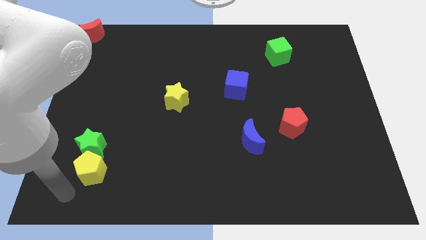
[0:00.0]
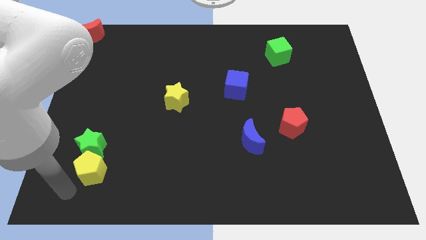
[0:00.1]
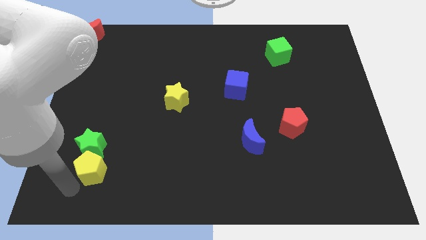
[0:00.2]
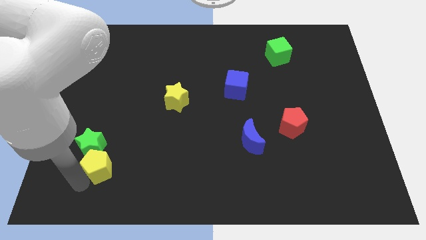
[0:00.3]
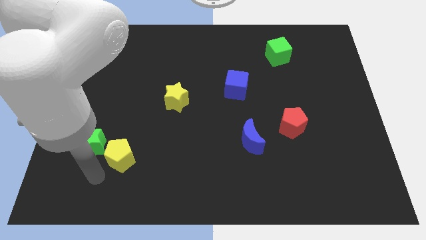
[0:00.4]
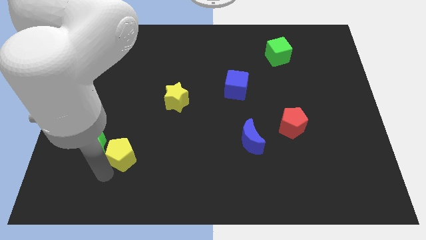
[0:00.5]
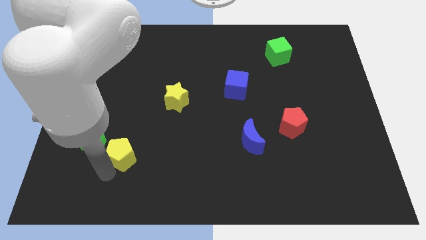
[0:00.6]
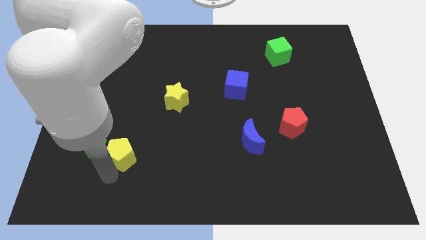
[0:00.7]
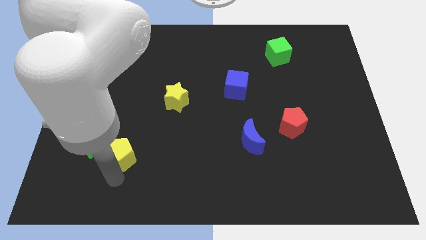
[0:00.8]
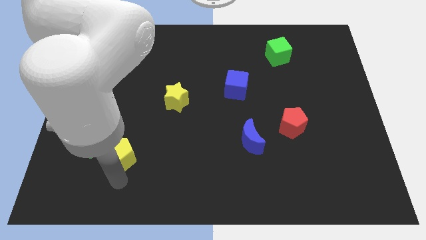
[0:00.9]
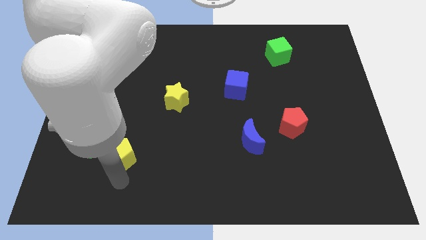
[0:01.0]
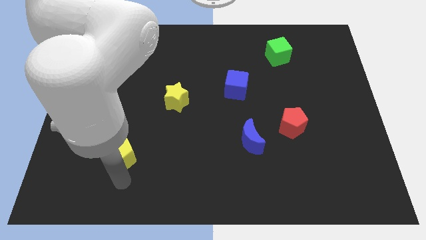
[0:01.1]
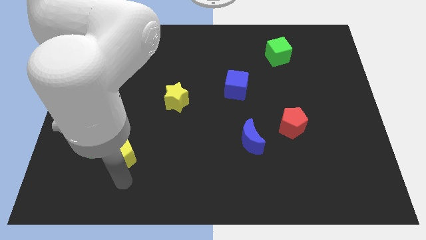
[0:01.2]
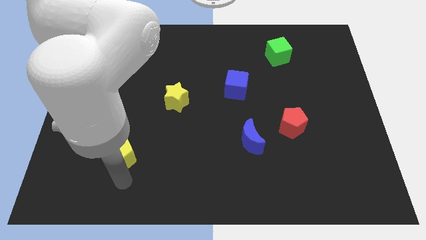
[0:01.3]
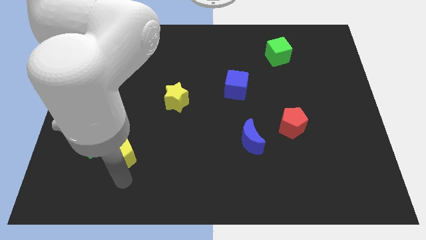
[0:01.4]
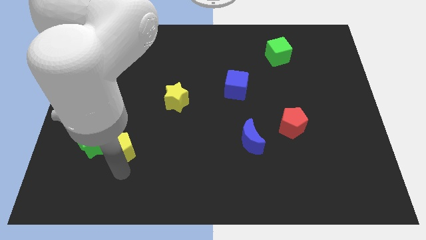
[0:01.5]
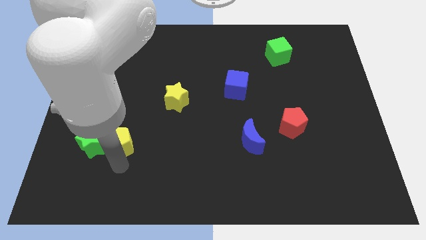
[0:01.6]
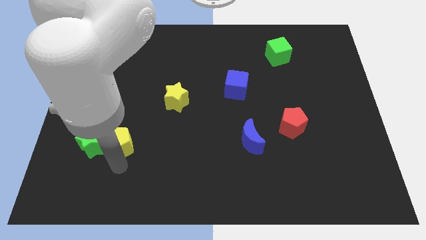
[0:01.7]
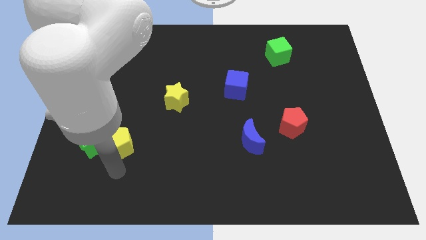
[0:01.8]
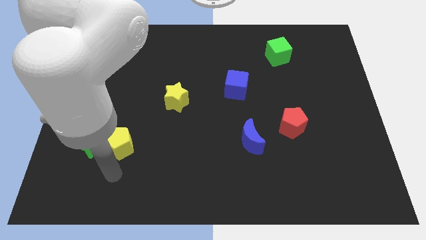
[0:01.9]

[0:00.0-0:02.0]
push the yellow pentagon to the right of the green star

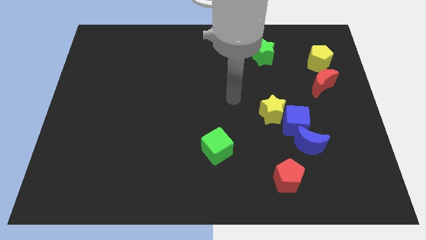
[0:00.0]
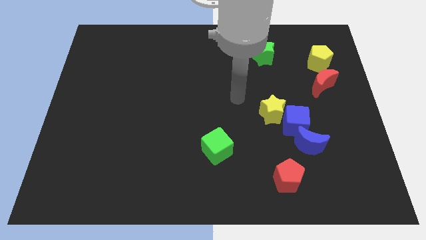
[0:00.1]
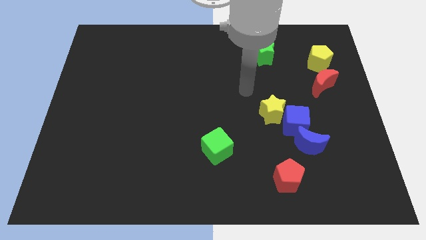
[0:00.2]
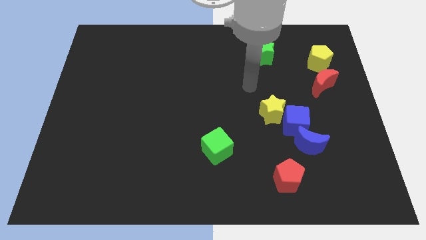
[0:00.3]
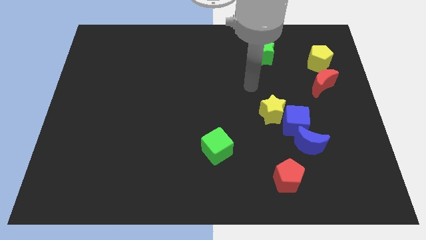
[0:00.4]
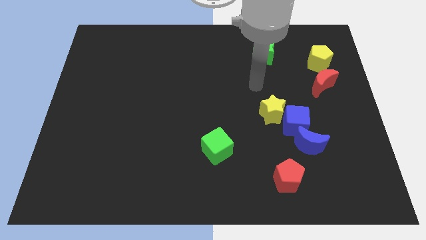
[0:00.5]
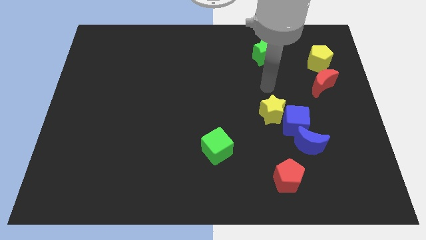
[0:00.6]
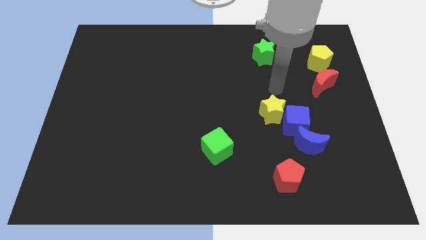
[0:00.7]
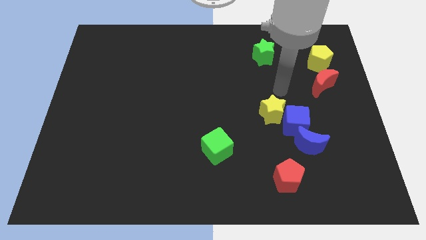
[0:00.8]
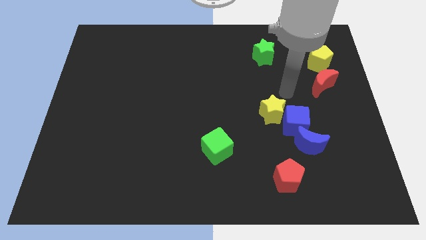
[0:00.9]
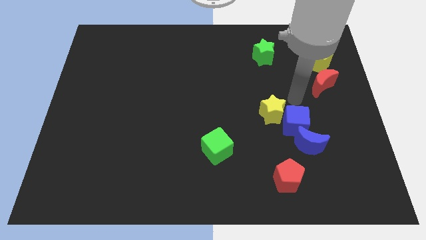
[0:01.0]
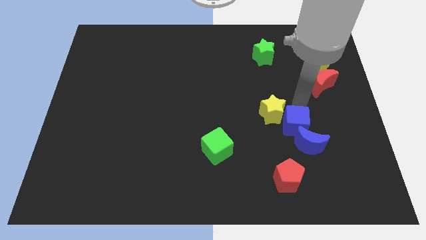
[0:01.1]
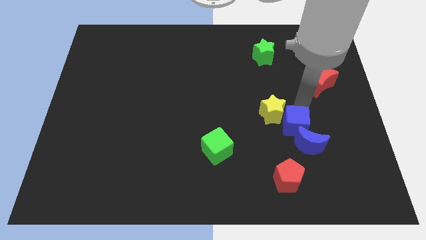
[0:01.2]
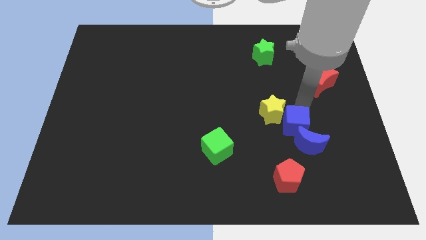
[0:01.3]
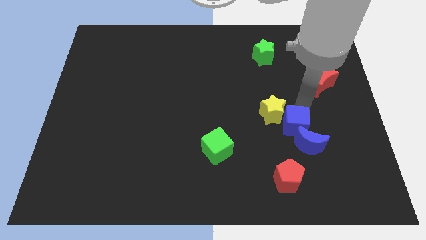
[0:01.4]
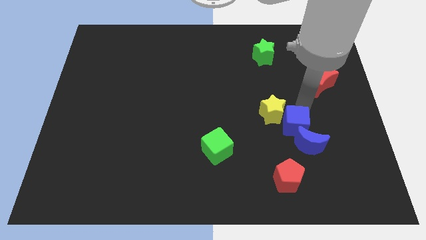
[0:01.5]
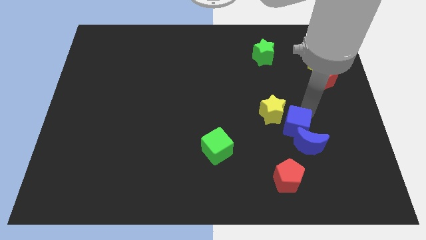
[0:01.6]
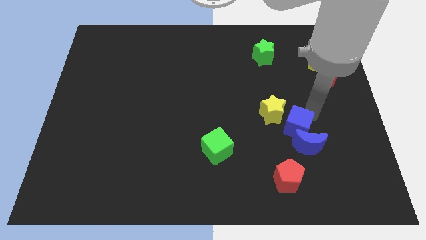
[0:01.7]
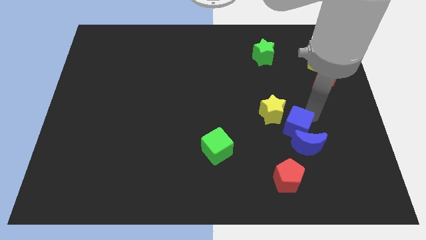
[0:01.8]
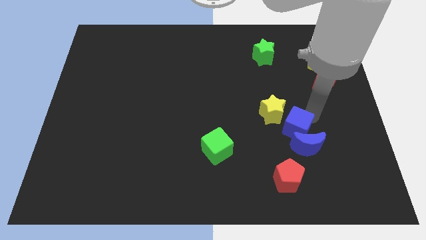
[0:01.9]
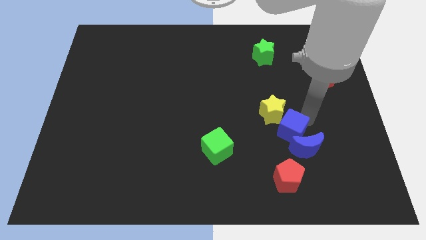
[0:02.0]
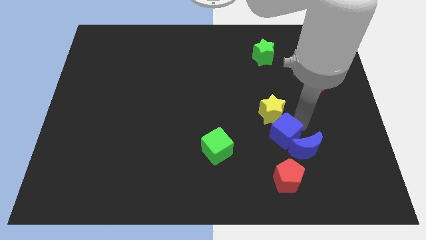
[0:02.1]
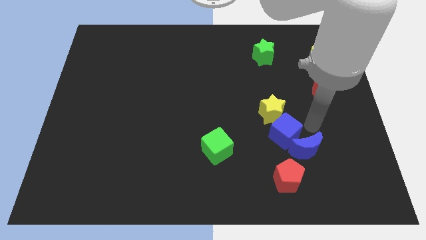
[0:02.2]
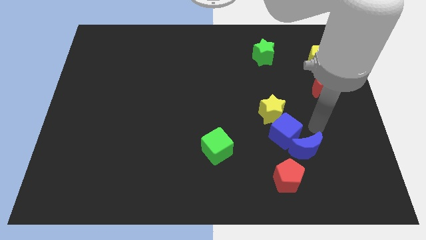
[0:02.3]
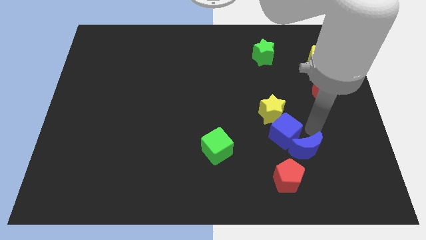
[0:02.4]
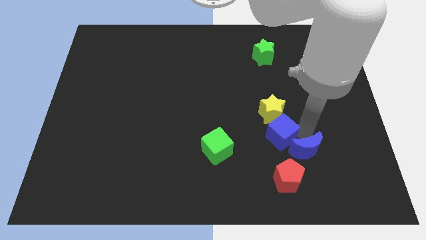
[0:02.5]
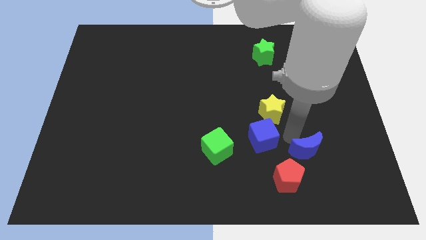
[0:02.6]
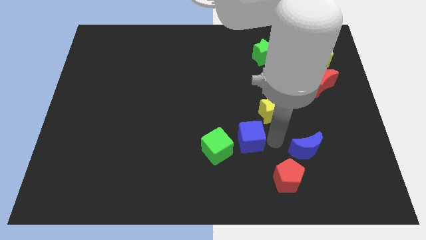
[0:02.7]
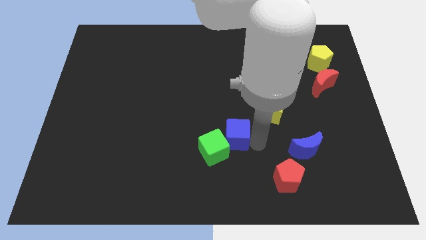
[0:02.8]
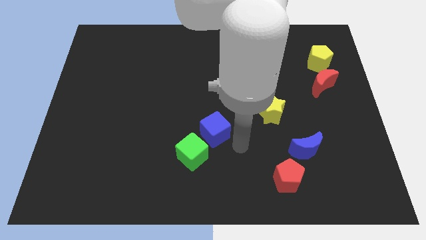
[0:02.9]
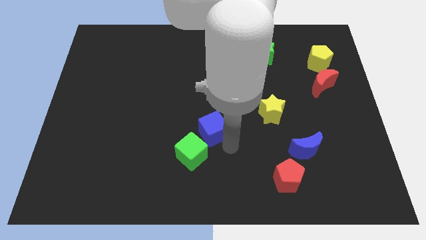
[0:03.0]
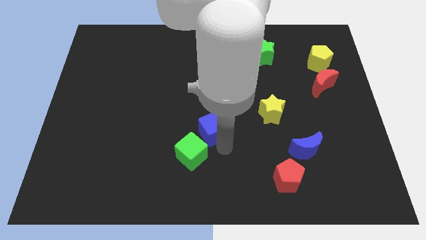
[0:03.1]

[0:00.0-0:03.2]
separate blue cube and blue moon

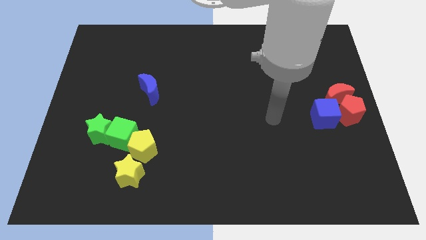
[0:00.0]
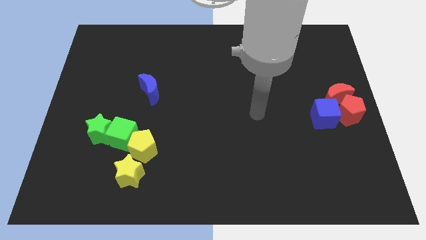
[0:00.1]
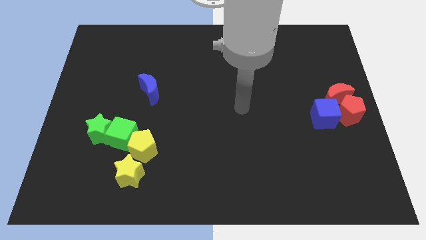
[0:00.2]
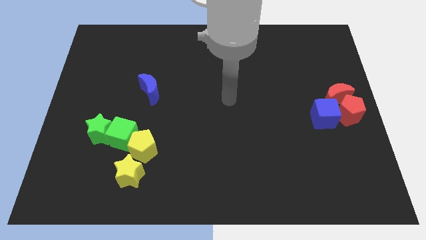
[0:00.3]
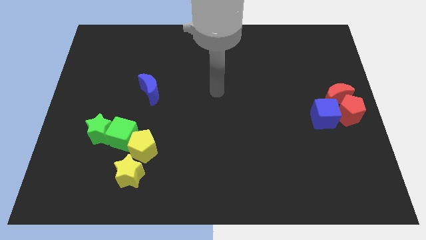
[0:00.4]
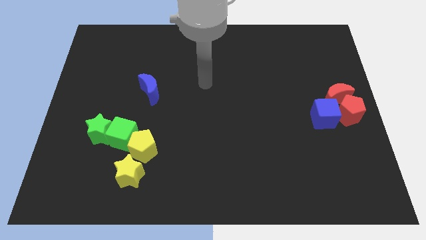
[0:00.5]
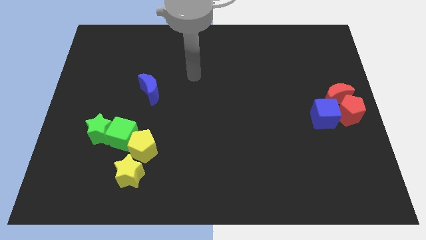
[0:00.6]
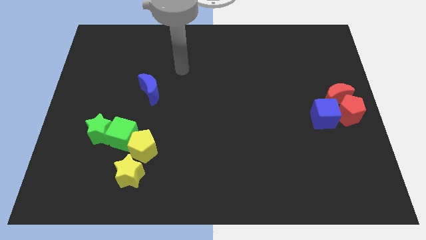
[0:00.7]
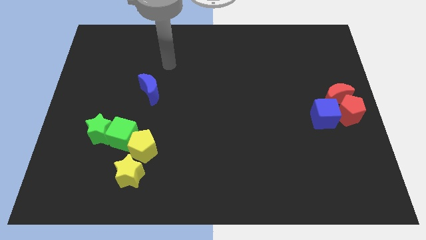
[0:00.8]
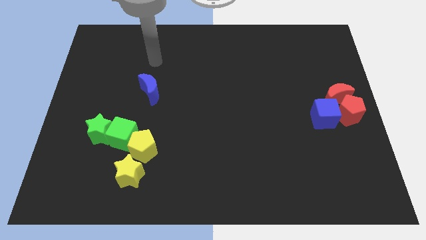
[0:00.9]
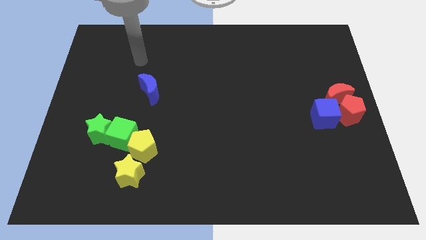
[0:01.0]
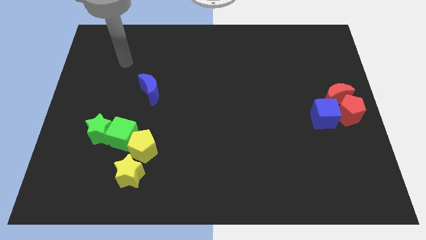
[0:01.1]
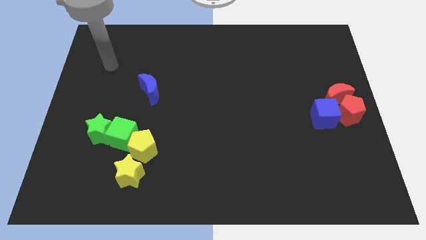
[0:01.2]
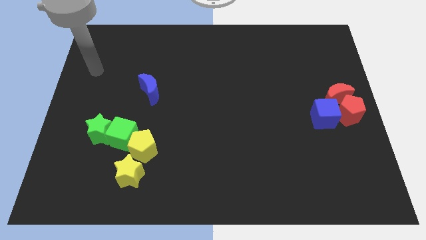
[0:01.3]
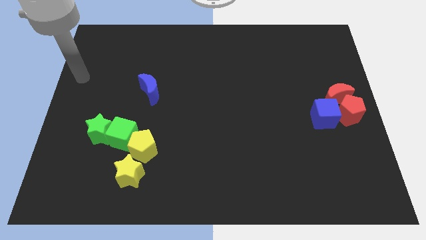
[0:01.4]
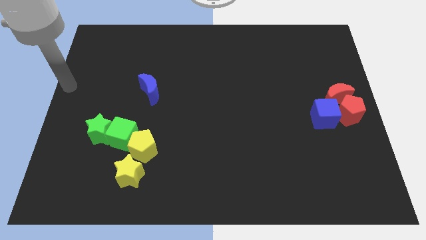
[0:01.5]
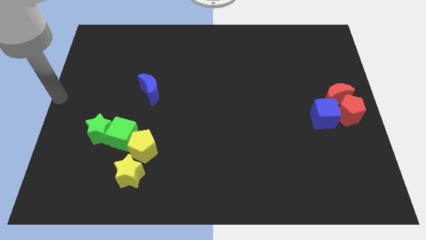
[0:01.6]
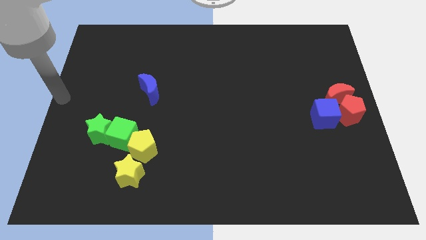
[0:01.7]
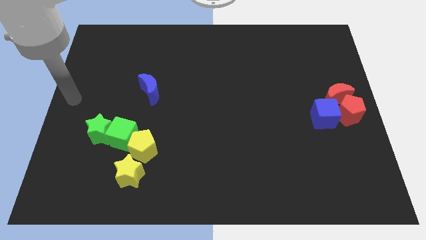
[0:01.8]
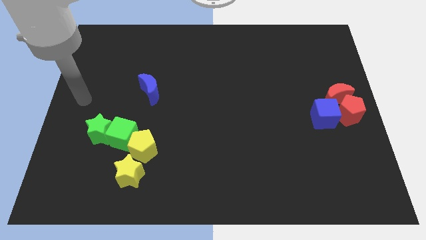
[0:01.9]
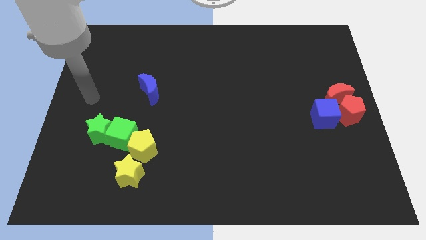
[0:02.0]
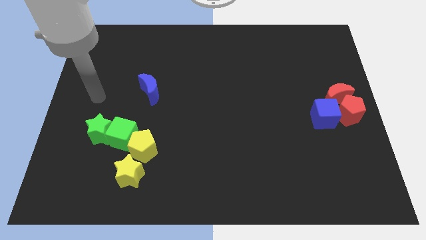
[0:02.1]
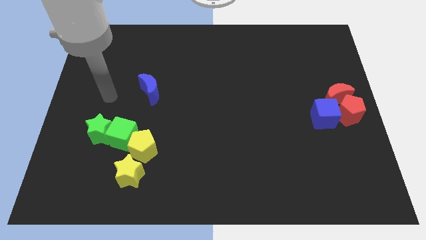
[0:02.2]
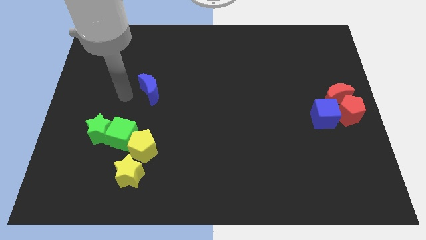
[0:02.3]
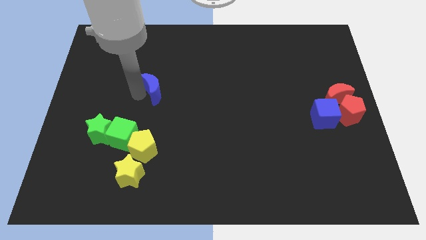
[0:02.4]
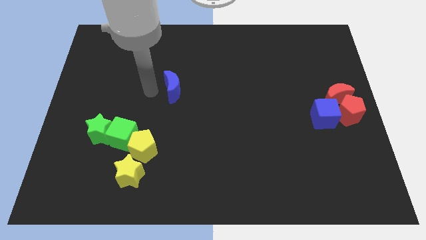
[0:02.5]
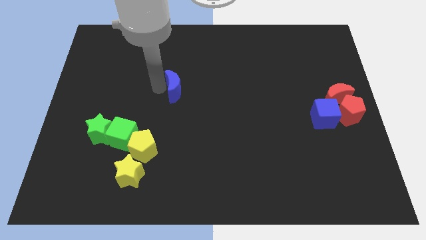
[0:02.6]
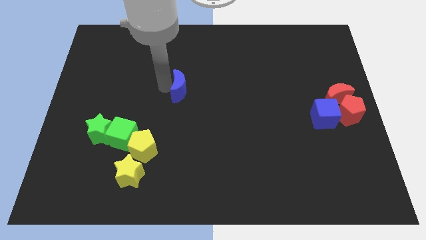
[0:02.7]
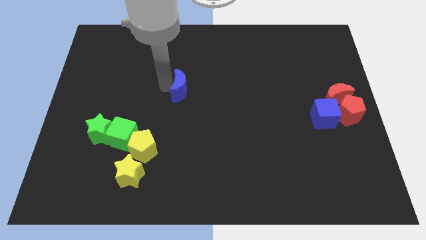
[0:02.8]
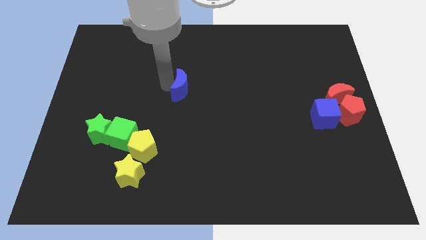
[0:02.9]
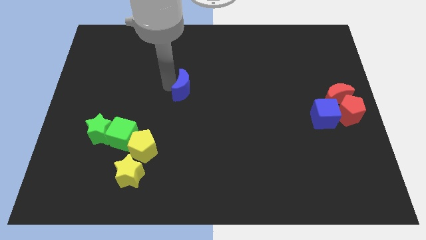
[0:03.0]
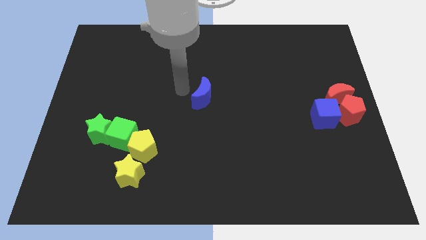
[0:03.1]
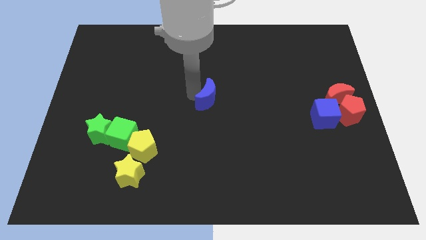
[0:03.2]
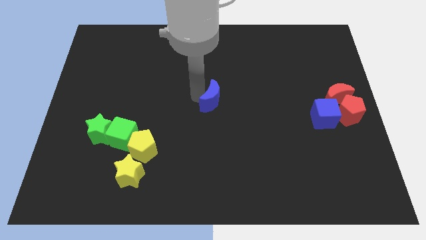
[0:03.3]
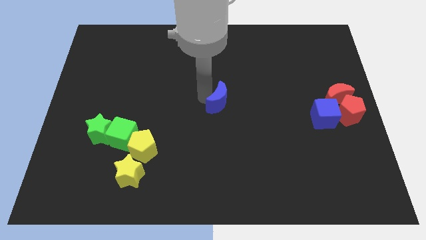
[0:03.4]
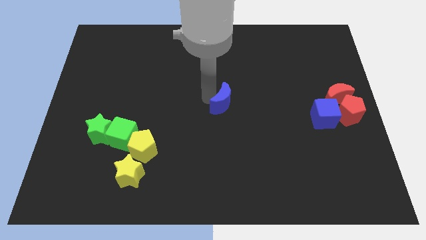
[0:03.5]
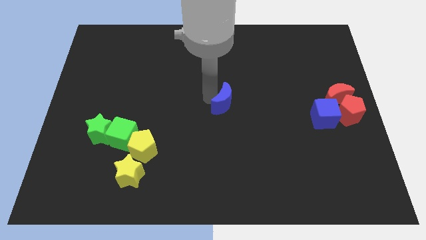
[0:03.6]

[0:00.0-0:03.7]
push the blue moon towards the center of the board

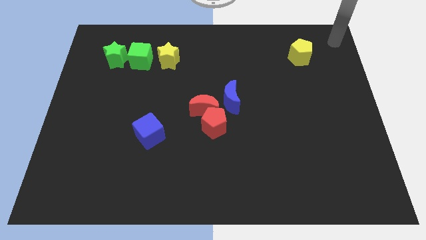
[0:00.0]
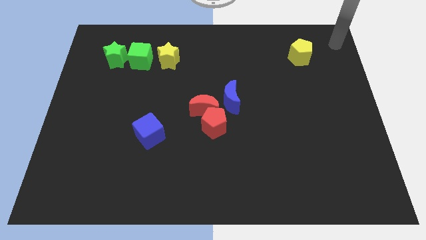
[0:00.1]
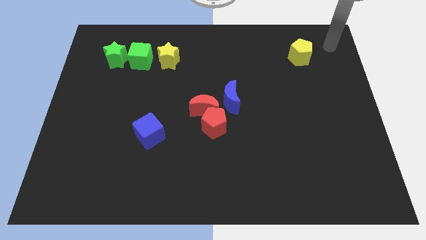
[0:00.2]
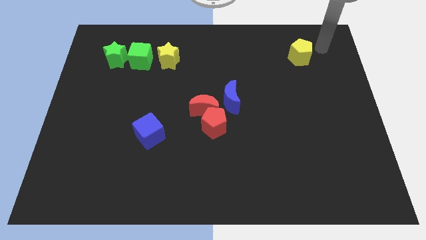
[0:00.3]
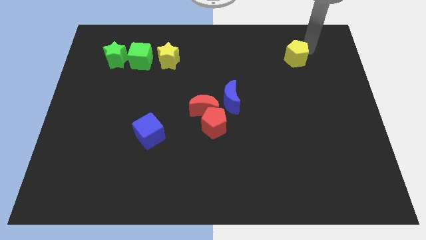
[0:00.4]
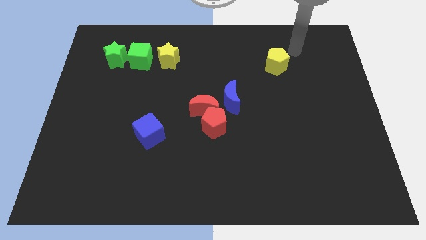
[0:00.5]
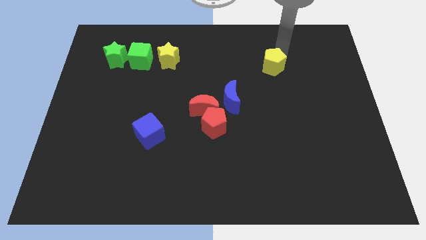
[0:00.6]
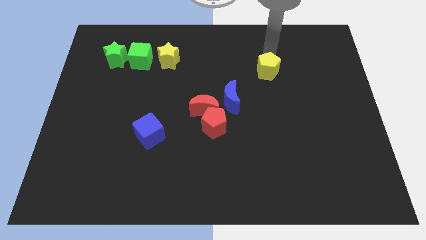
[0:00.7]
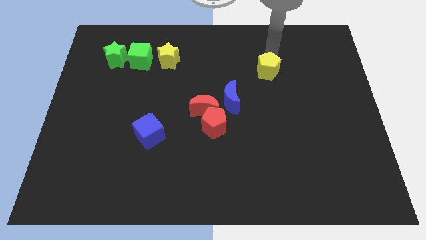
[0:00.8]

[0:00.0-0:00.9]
push the yellow pentagon towards the center of the board
